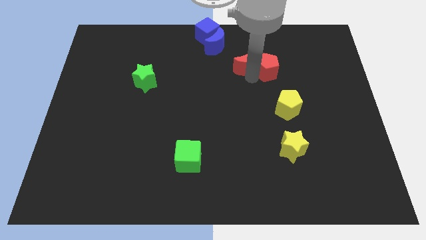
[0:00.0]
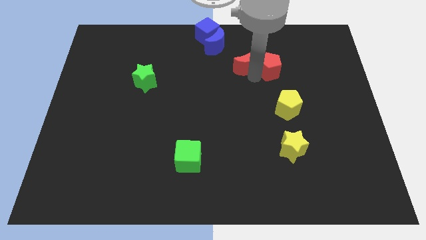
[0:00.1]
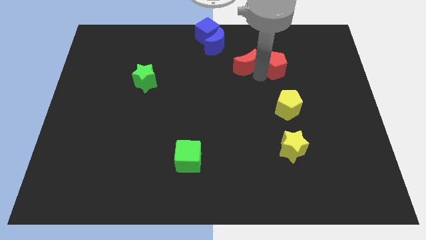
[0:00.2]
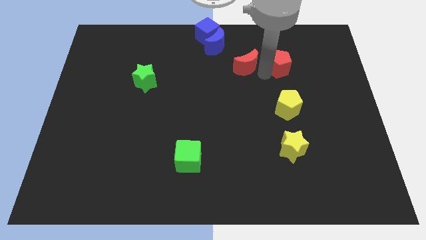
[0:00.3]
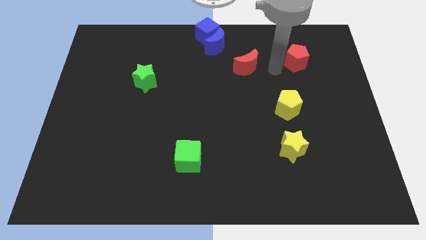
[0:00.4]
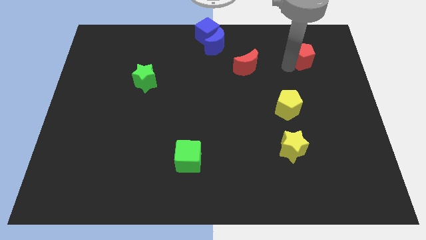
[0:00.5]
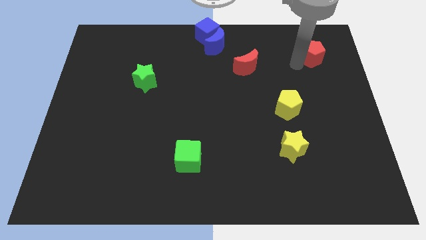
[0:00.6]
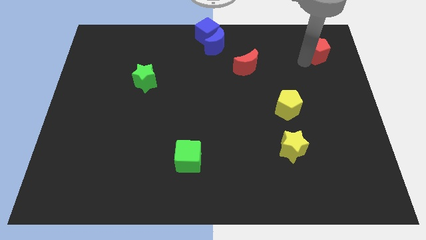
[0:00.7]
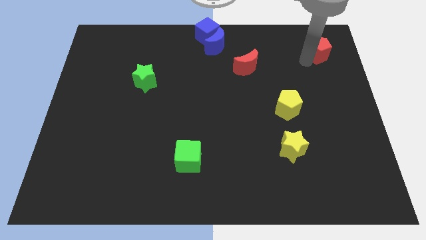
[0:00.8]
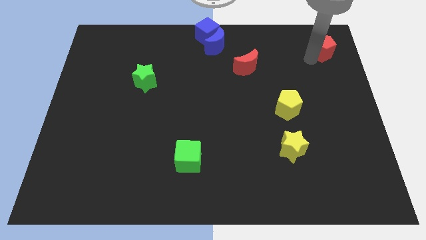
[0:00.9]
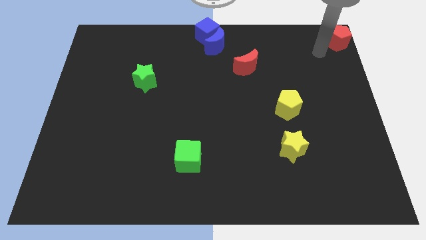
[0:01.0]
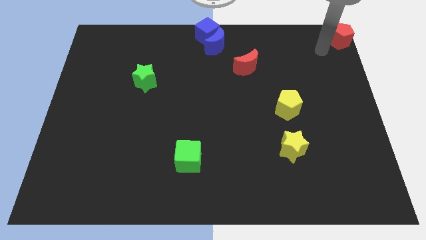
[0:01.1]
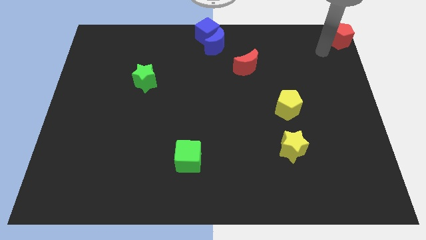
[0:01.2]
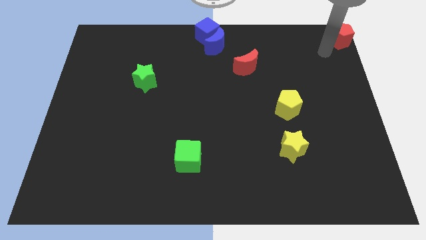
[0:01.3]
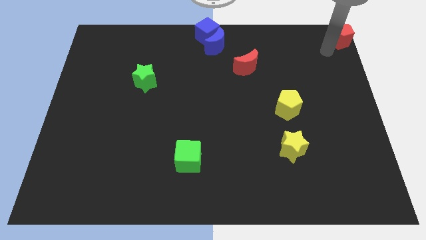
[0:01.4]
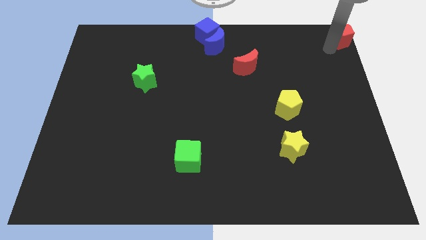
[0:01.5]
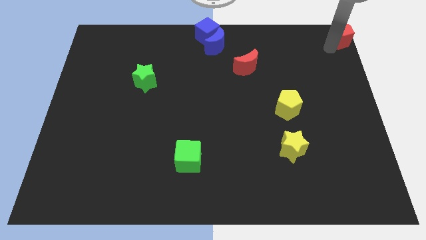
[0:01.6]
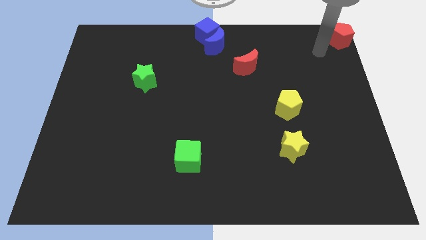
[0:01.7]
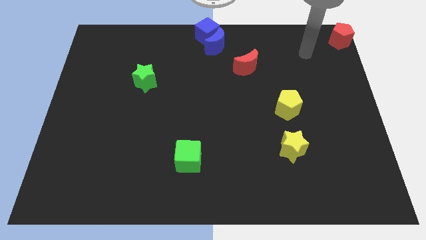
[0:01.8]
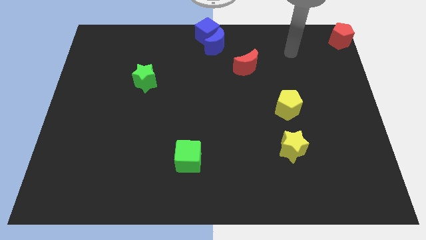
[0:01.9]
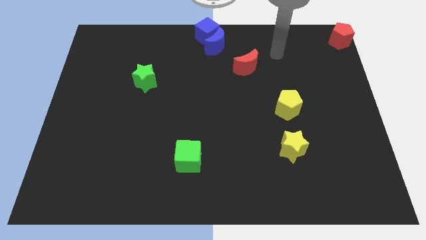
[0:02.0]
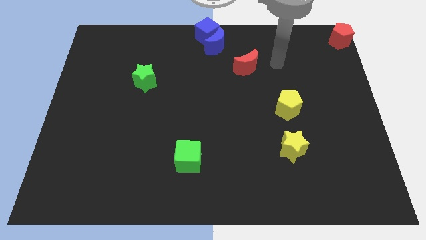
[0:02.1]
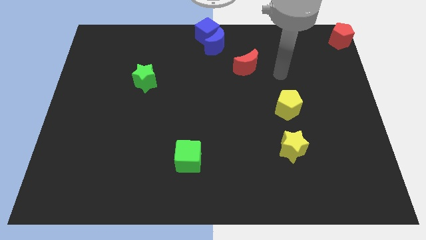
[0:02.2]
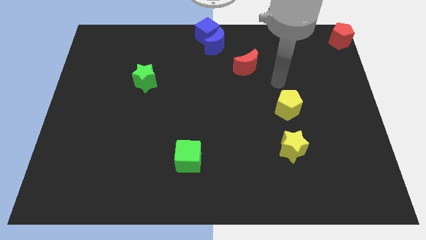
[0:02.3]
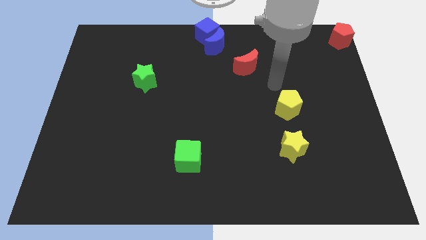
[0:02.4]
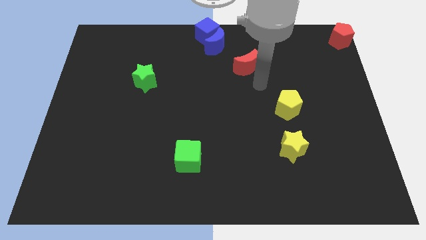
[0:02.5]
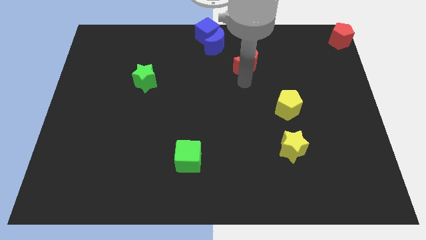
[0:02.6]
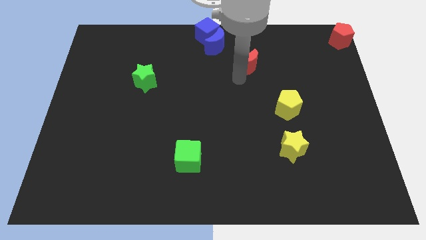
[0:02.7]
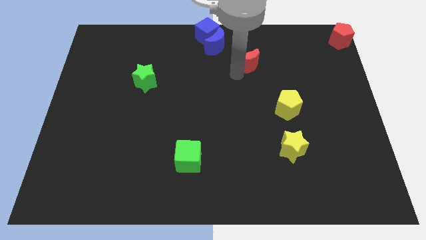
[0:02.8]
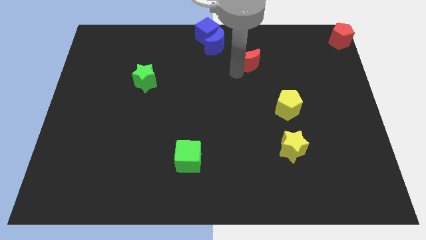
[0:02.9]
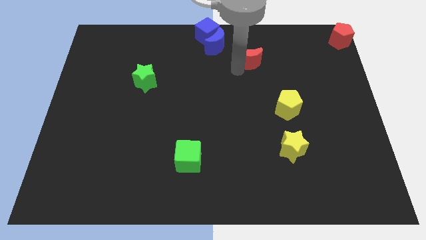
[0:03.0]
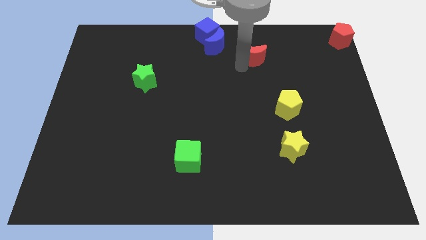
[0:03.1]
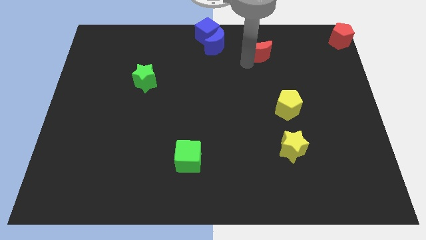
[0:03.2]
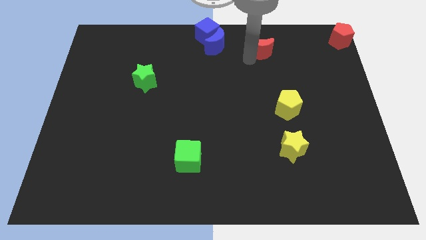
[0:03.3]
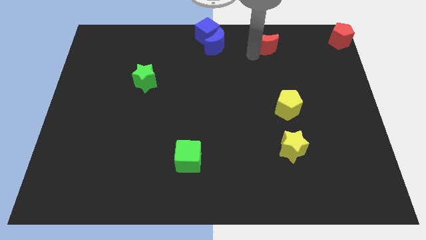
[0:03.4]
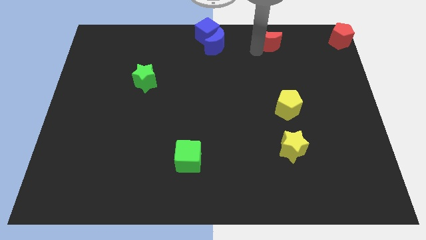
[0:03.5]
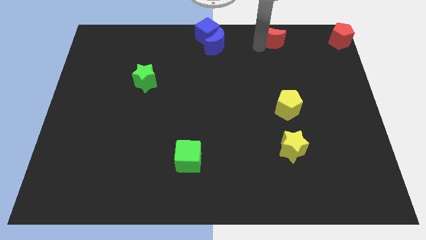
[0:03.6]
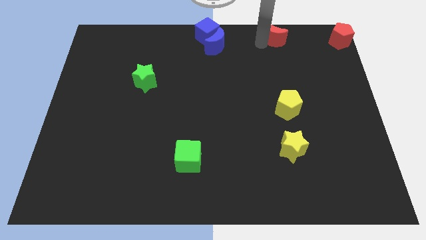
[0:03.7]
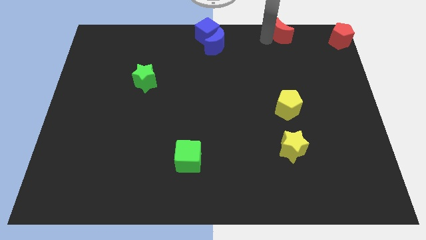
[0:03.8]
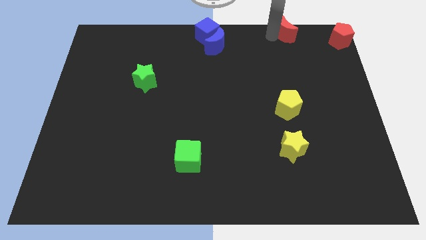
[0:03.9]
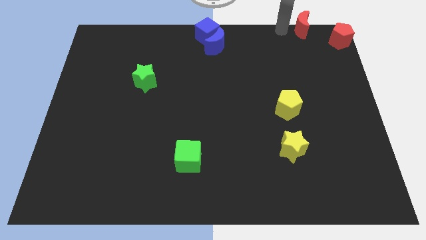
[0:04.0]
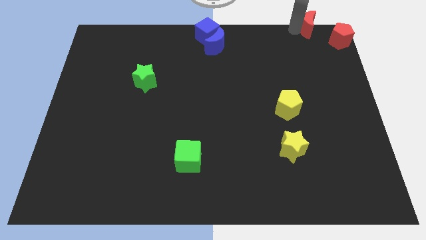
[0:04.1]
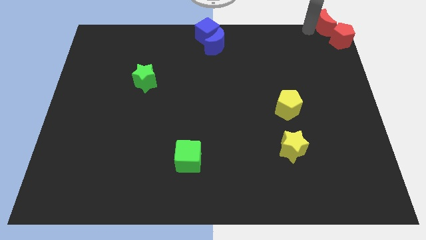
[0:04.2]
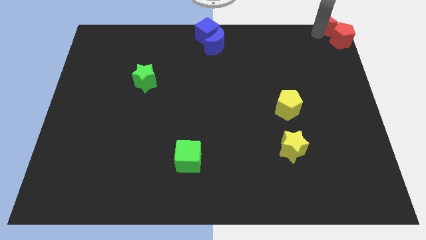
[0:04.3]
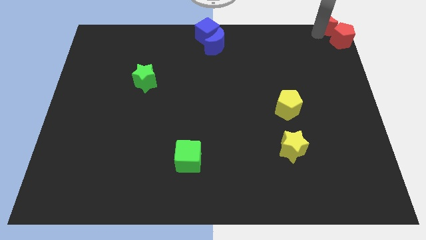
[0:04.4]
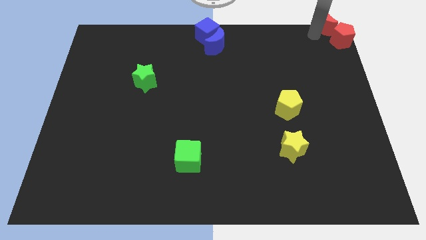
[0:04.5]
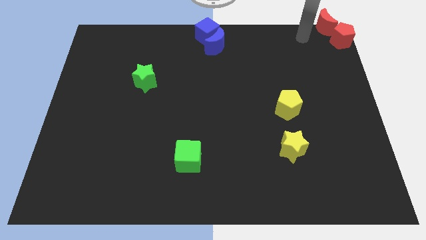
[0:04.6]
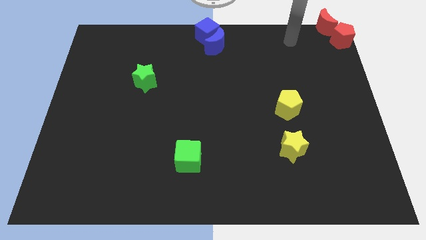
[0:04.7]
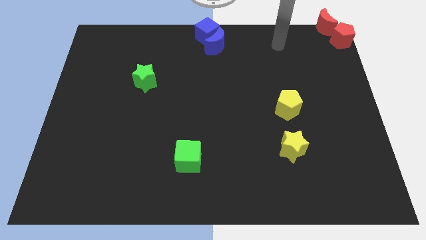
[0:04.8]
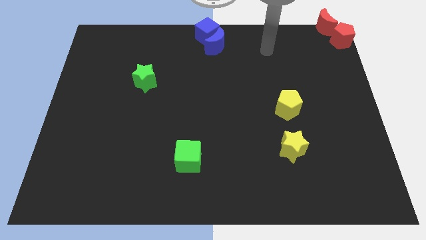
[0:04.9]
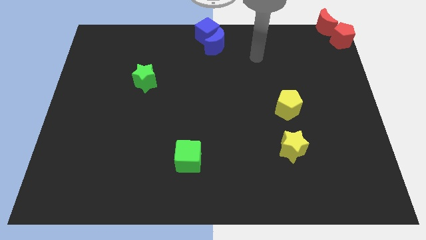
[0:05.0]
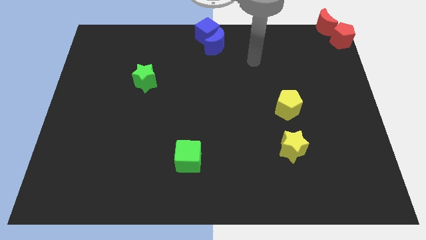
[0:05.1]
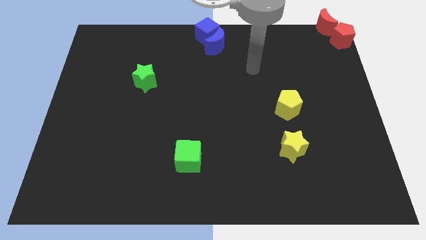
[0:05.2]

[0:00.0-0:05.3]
push the red blocks to the top right corner of the board

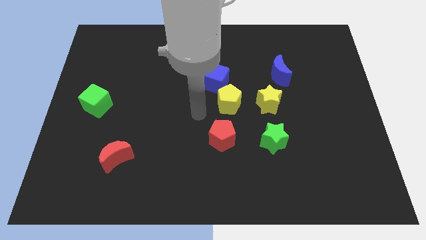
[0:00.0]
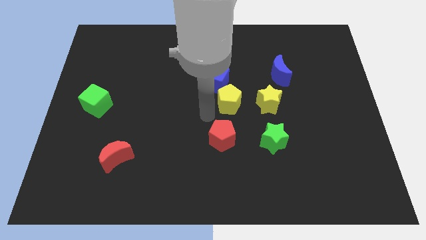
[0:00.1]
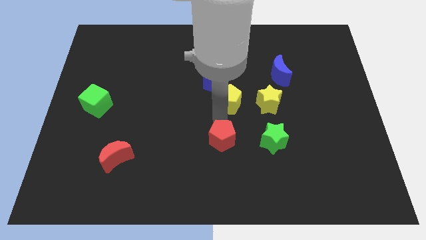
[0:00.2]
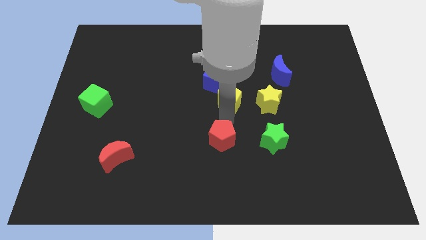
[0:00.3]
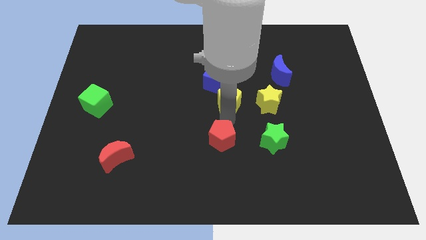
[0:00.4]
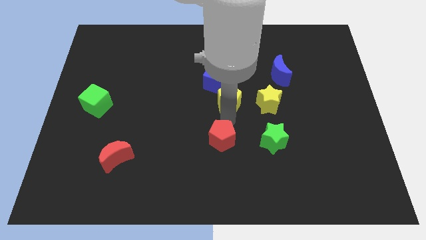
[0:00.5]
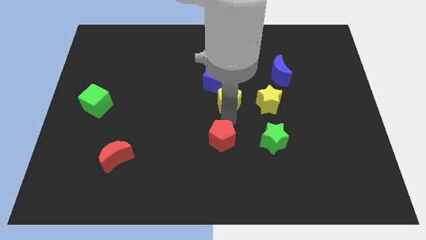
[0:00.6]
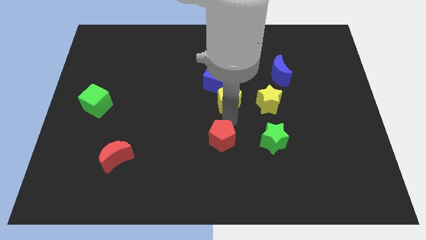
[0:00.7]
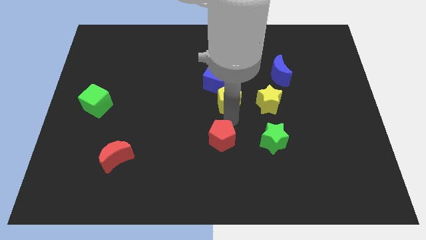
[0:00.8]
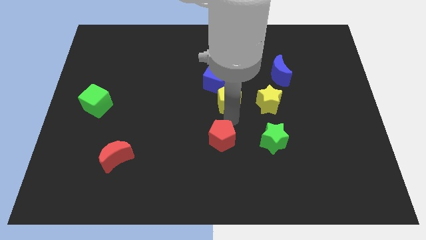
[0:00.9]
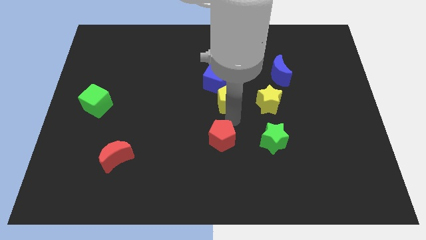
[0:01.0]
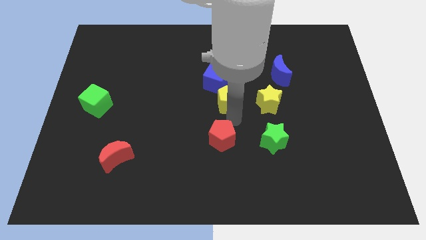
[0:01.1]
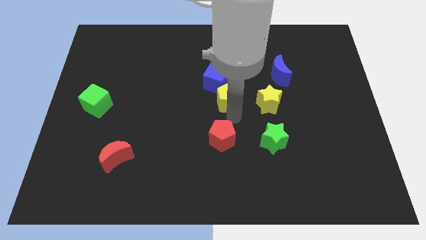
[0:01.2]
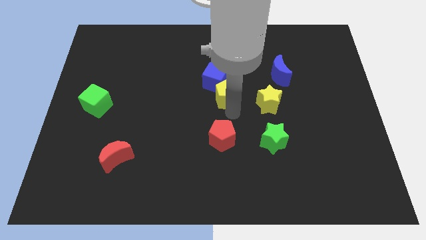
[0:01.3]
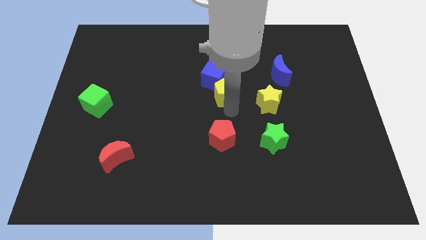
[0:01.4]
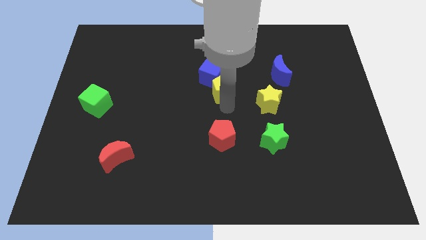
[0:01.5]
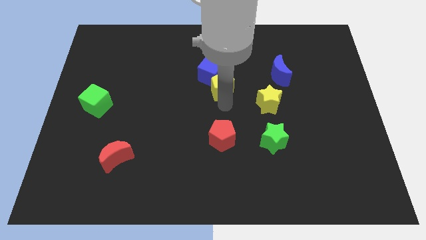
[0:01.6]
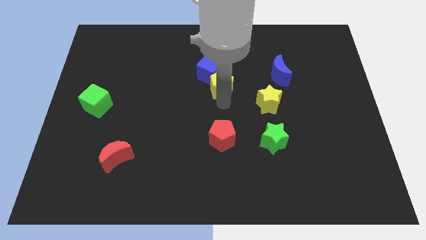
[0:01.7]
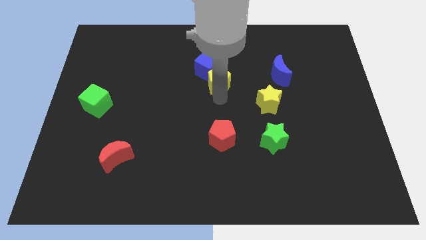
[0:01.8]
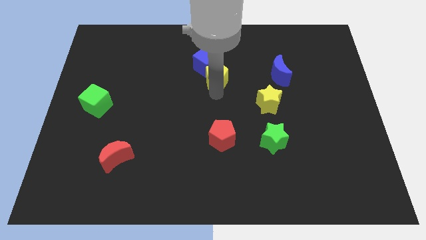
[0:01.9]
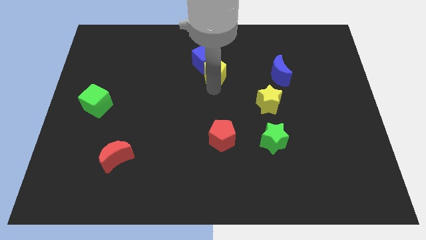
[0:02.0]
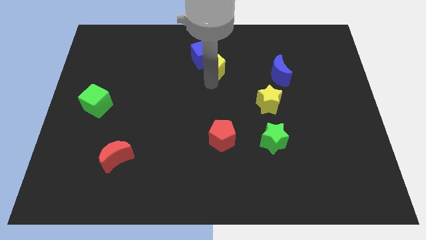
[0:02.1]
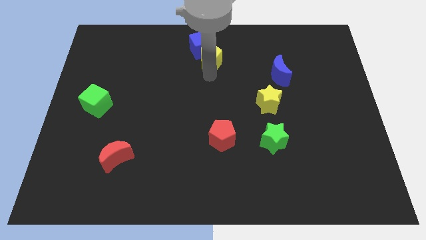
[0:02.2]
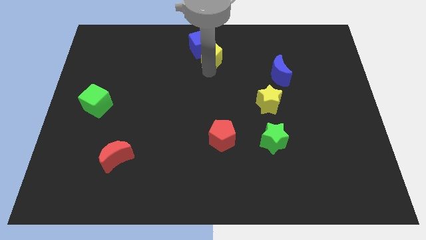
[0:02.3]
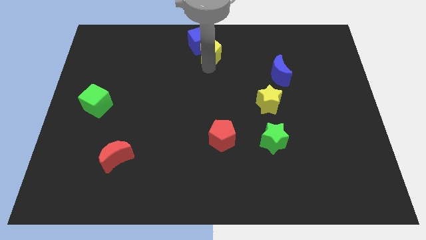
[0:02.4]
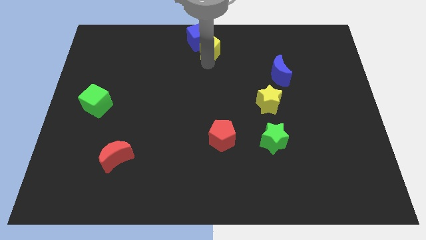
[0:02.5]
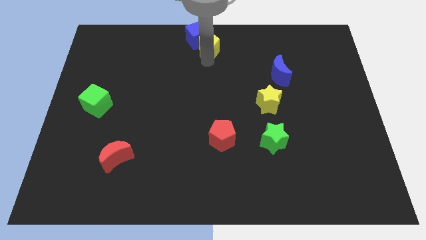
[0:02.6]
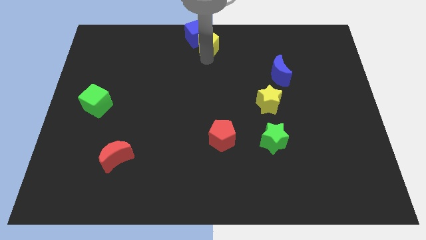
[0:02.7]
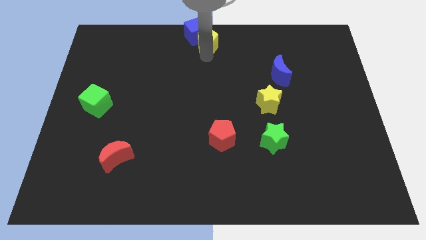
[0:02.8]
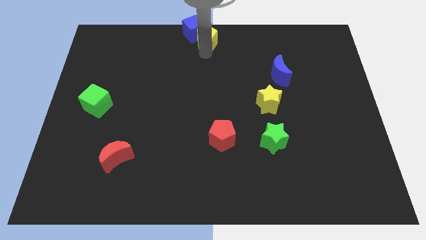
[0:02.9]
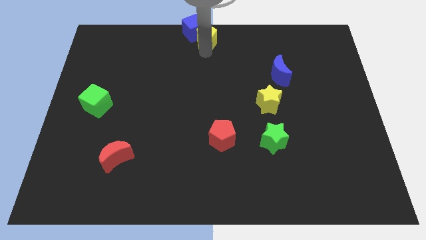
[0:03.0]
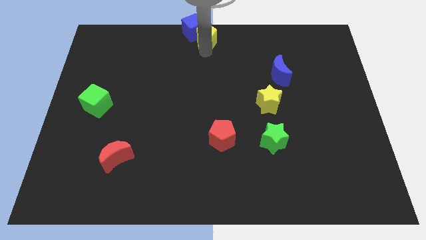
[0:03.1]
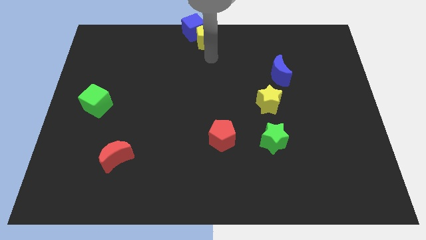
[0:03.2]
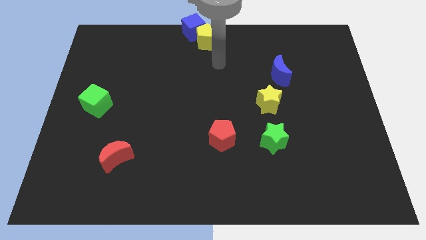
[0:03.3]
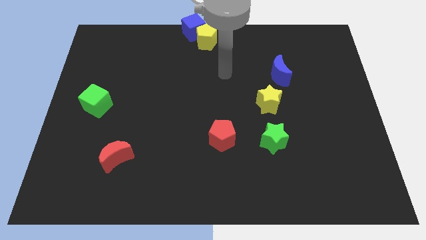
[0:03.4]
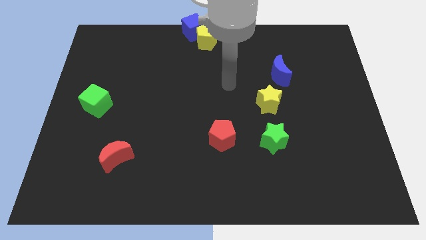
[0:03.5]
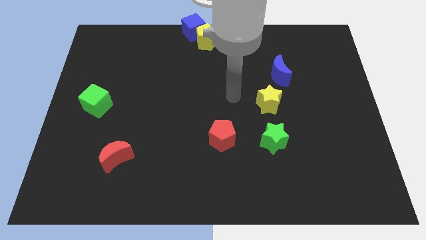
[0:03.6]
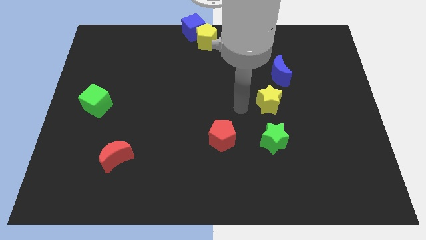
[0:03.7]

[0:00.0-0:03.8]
move yellow pentagon along with the blue cube towards the top center of the board
